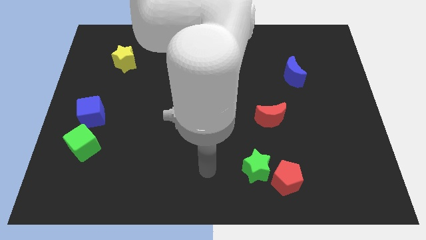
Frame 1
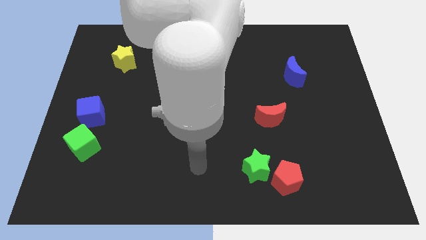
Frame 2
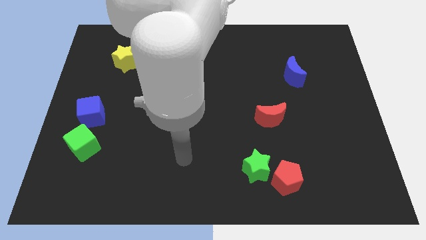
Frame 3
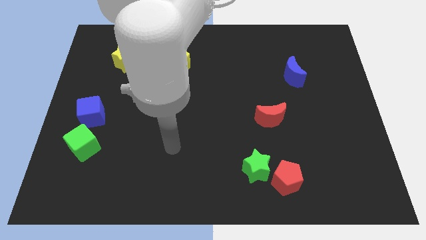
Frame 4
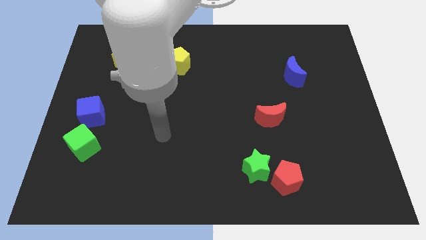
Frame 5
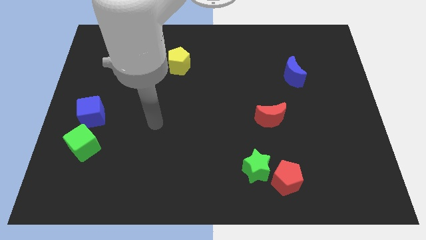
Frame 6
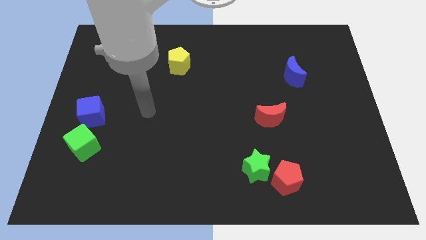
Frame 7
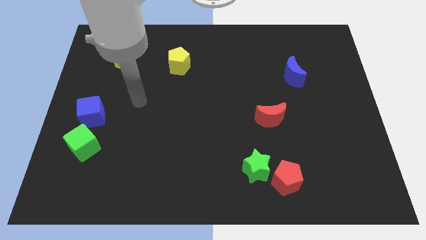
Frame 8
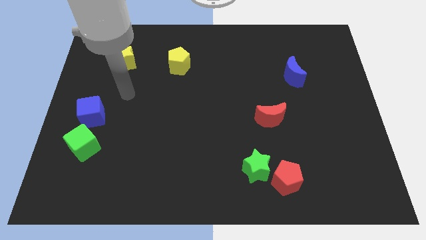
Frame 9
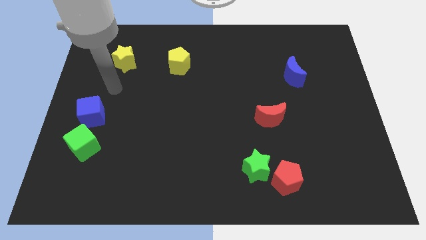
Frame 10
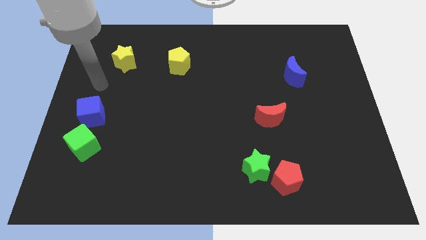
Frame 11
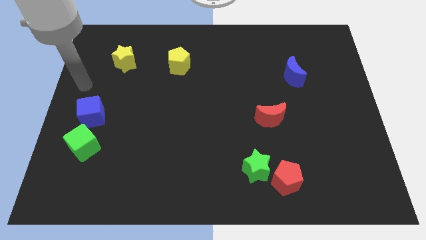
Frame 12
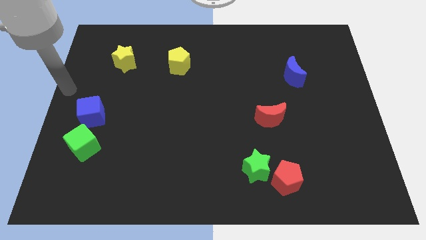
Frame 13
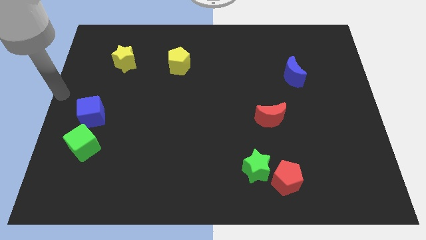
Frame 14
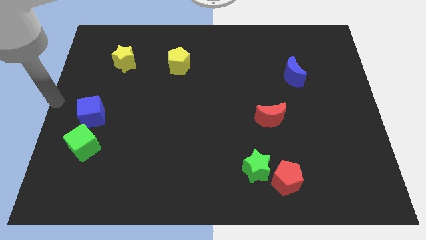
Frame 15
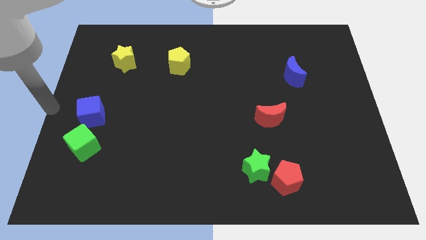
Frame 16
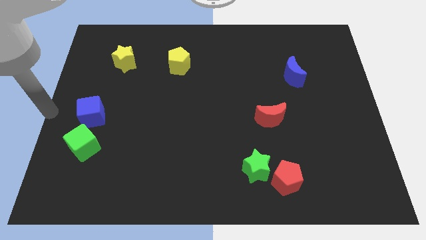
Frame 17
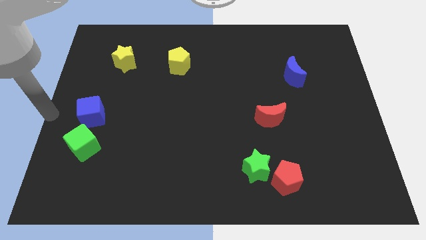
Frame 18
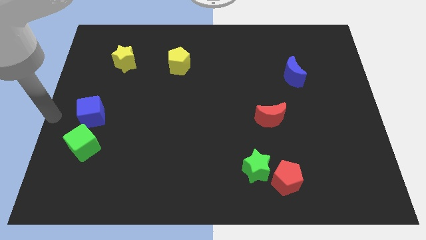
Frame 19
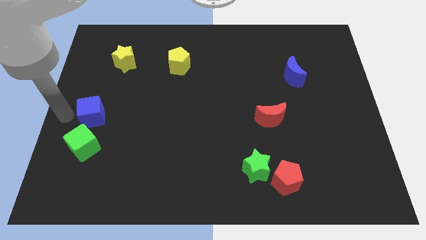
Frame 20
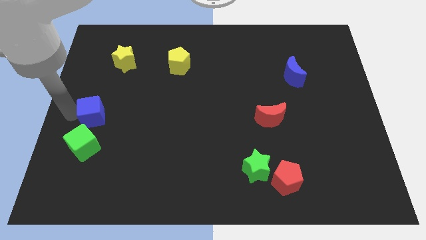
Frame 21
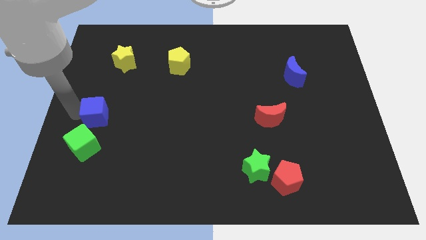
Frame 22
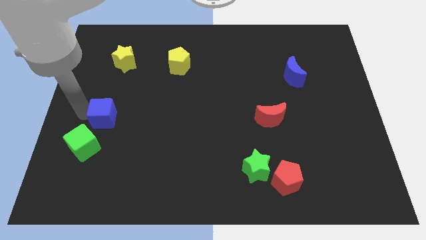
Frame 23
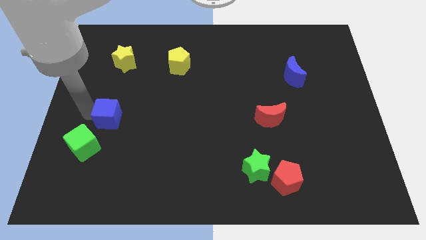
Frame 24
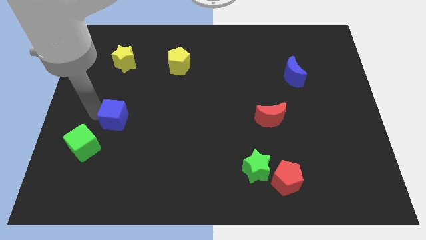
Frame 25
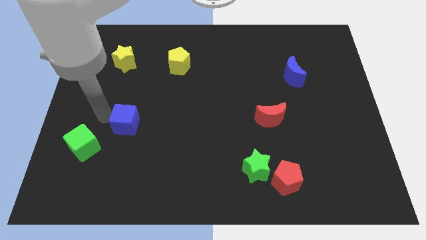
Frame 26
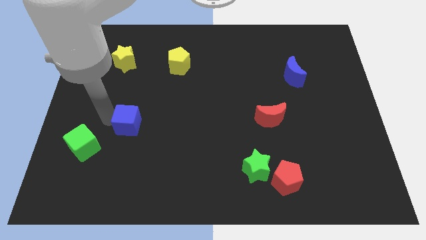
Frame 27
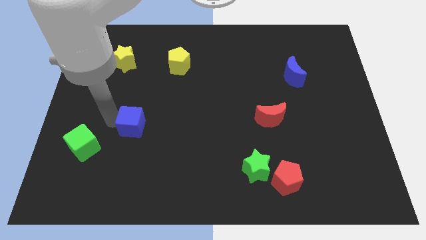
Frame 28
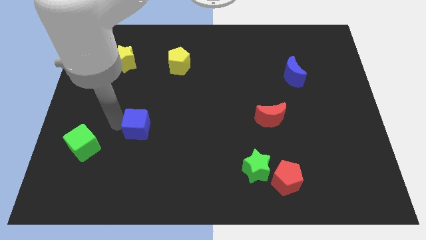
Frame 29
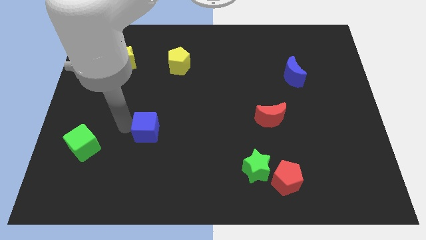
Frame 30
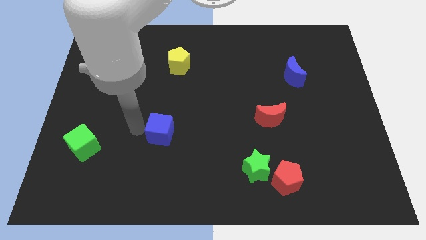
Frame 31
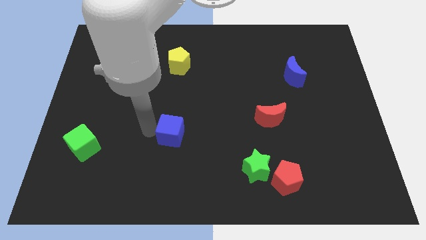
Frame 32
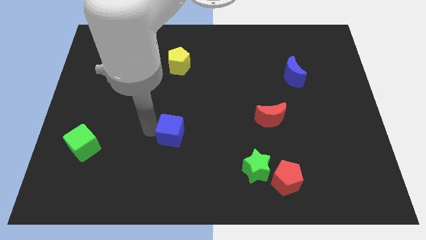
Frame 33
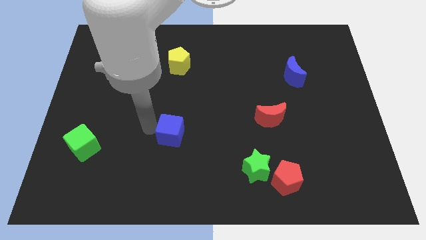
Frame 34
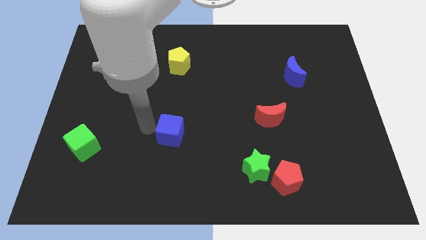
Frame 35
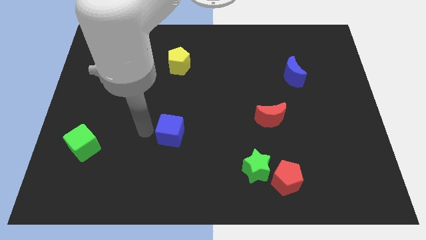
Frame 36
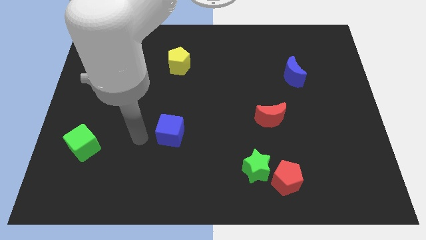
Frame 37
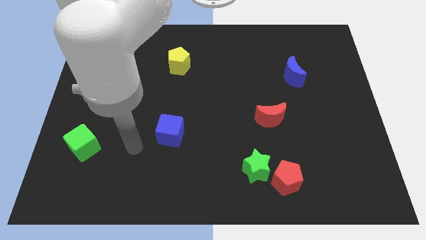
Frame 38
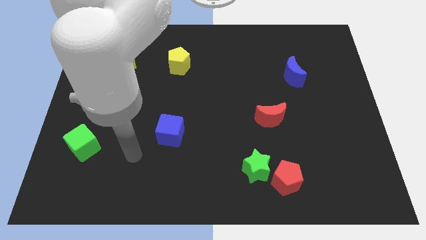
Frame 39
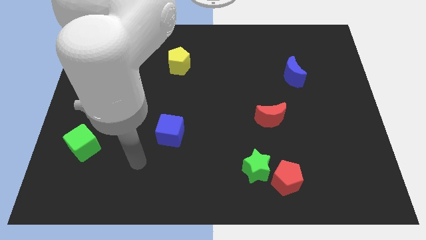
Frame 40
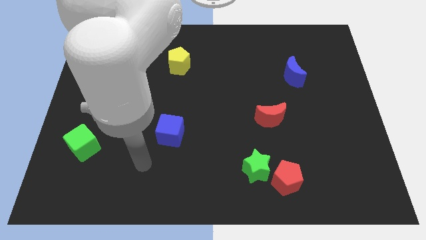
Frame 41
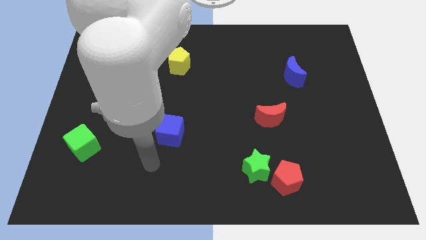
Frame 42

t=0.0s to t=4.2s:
move the blue cube towards the right of the board

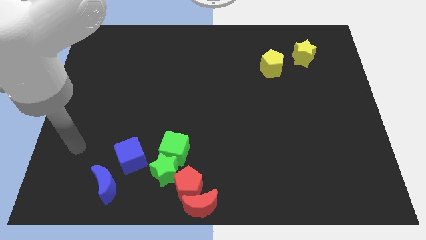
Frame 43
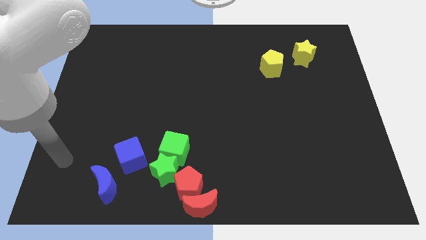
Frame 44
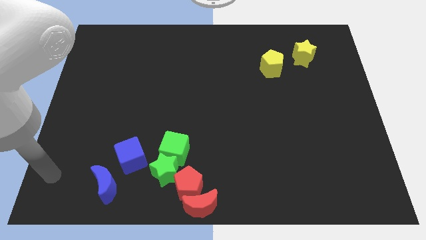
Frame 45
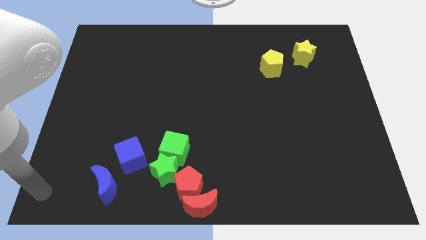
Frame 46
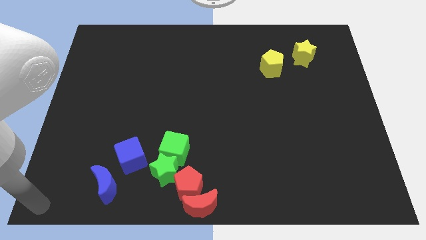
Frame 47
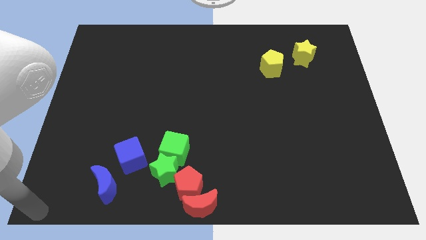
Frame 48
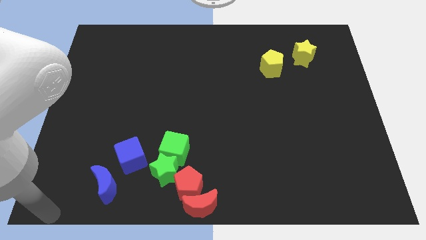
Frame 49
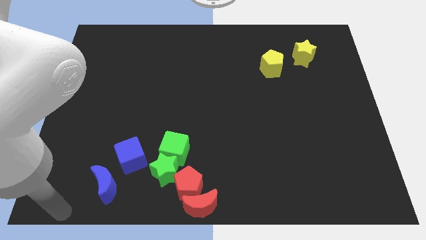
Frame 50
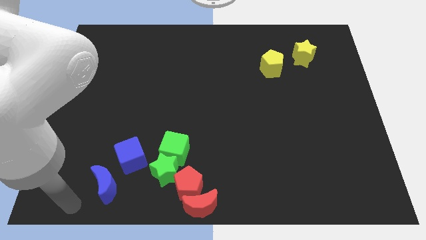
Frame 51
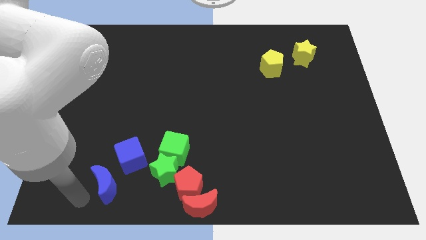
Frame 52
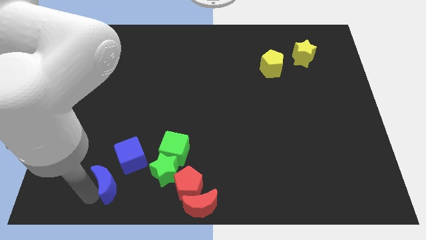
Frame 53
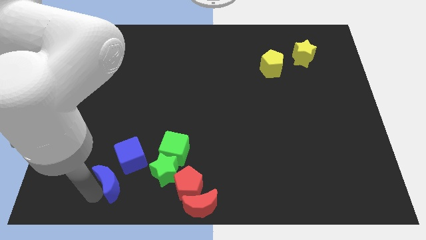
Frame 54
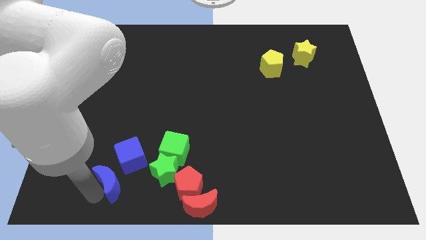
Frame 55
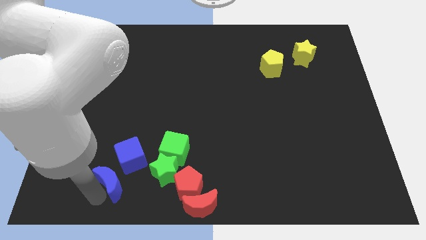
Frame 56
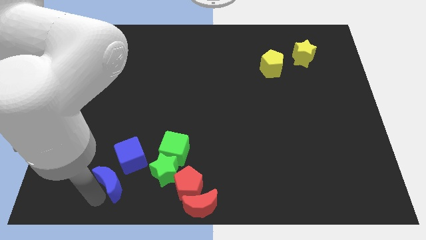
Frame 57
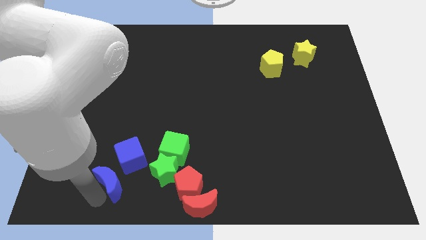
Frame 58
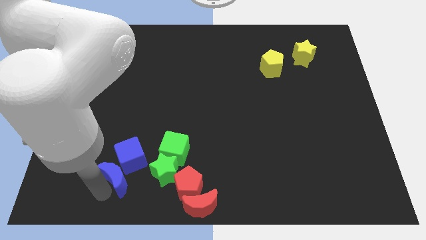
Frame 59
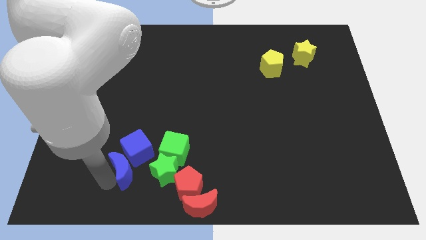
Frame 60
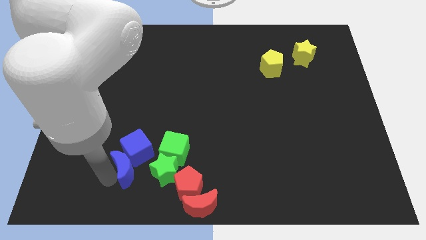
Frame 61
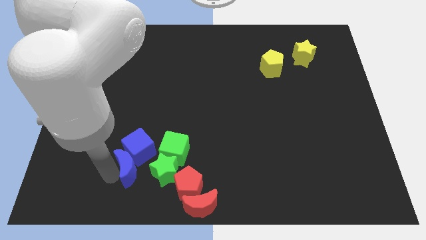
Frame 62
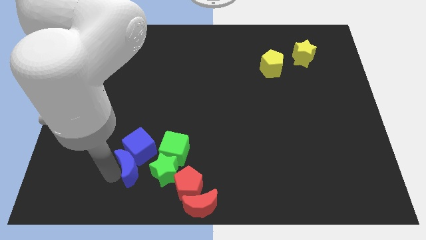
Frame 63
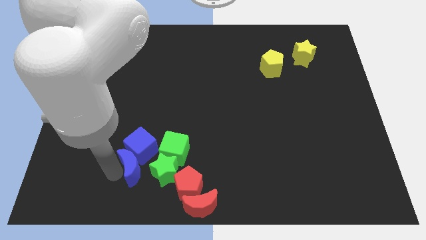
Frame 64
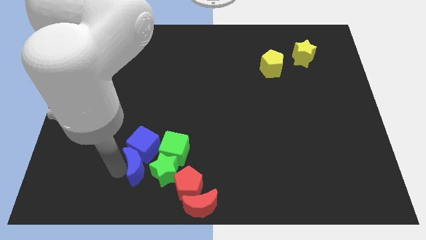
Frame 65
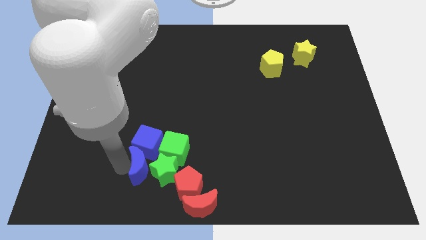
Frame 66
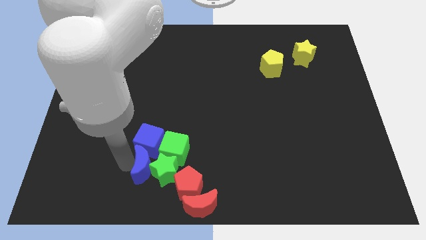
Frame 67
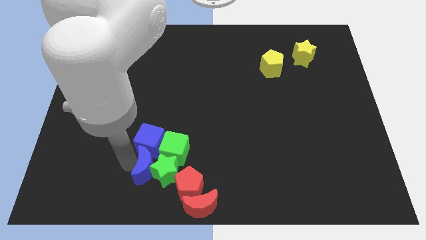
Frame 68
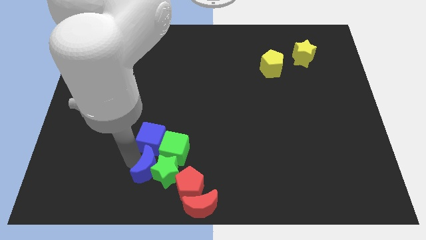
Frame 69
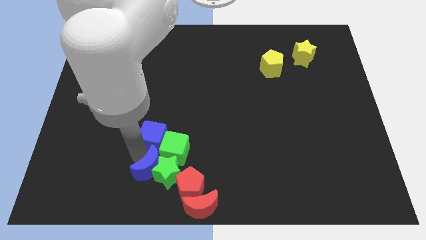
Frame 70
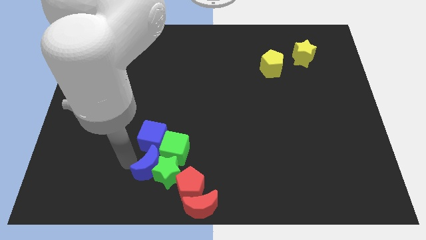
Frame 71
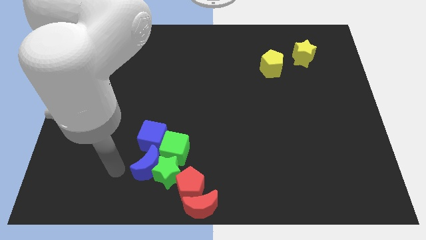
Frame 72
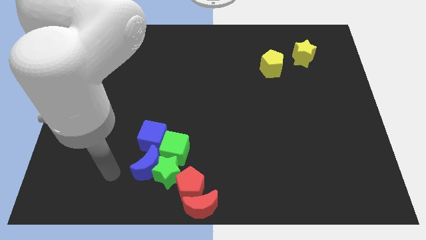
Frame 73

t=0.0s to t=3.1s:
push the blue moon and blue cube to the left of green cube and green star

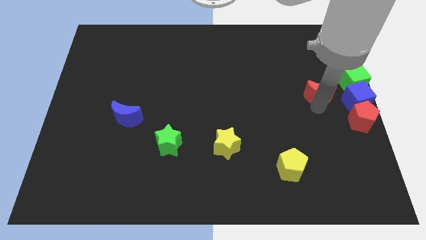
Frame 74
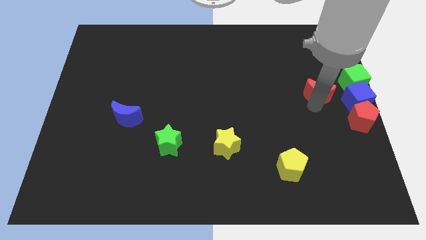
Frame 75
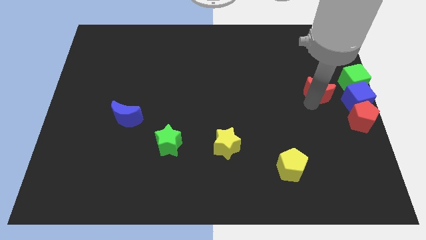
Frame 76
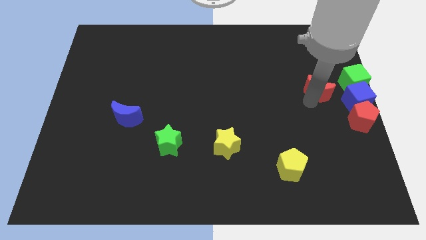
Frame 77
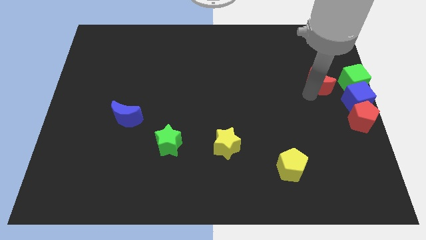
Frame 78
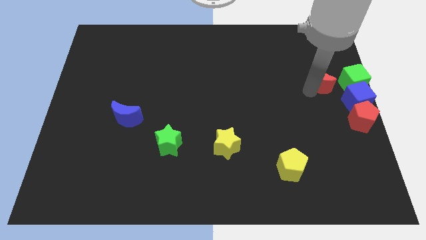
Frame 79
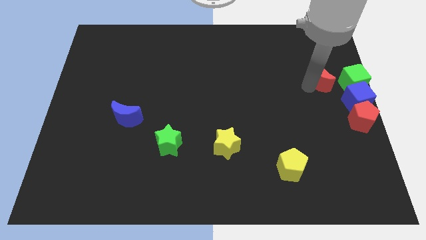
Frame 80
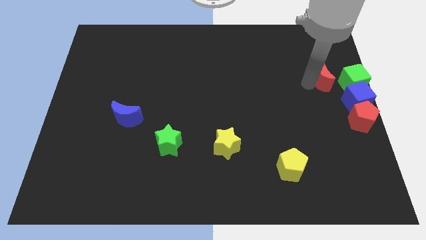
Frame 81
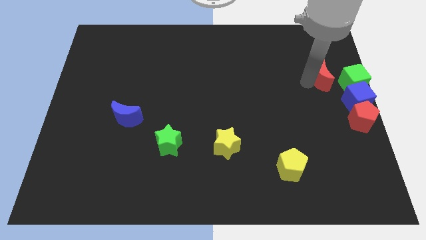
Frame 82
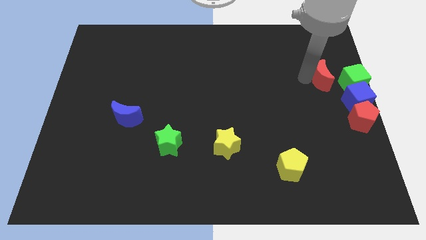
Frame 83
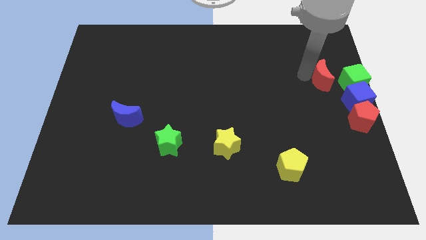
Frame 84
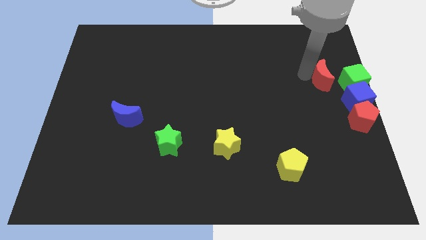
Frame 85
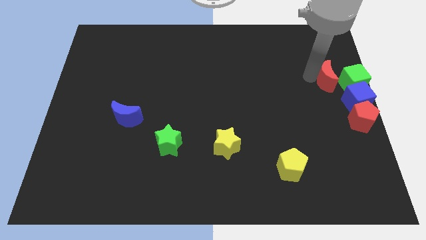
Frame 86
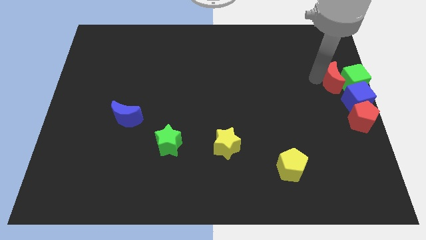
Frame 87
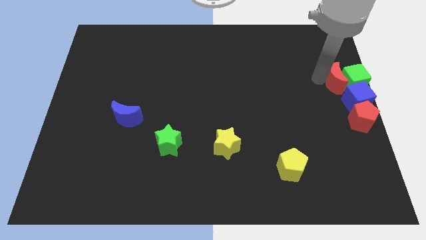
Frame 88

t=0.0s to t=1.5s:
place red moon left to the green cube

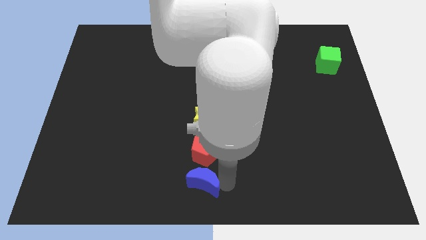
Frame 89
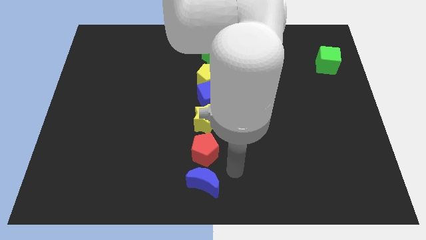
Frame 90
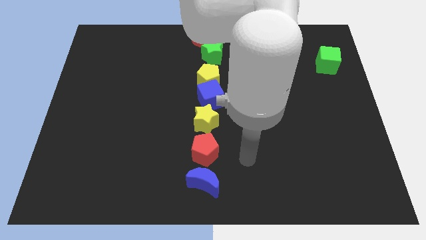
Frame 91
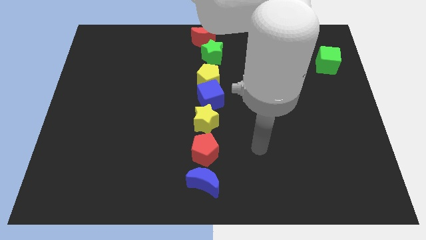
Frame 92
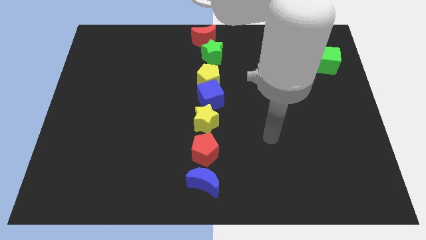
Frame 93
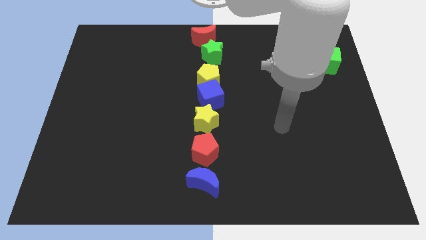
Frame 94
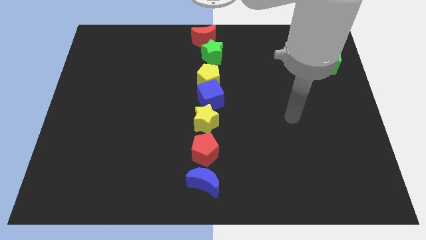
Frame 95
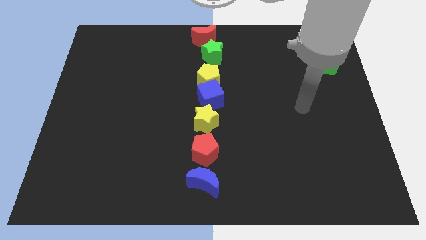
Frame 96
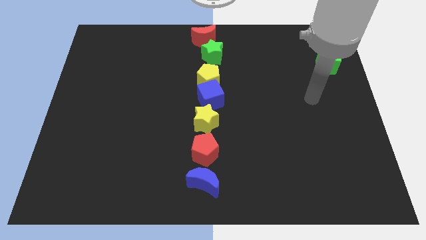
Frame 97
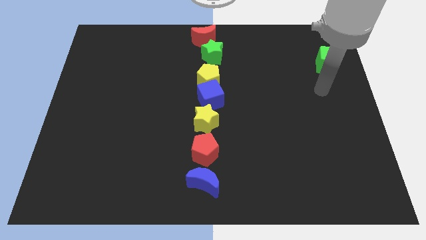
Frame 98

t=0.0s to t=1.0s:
move the arm away from the blue moon
